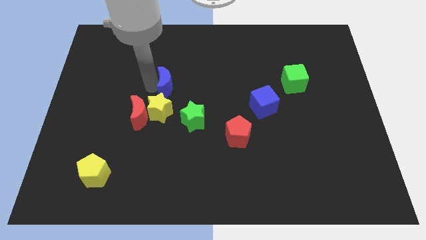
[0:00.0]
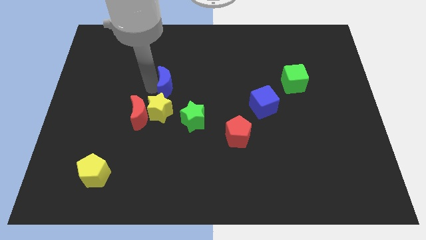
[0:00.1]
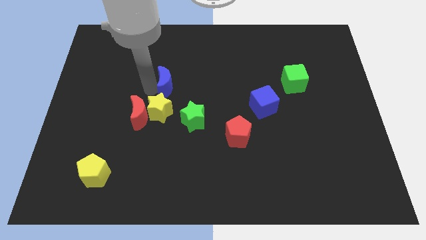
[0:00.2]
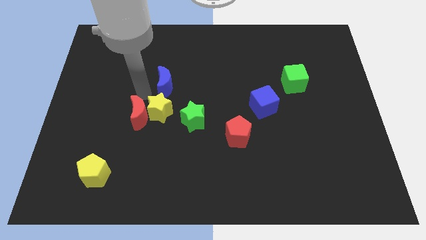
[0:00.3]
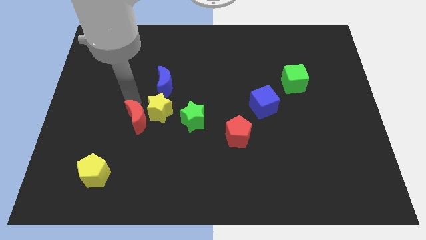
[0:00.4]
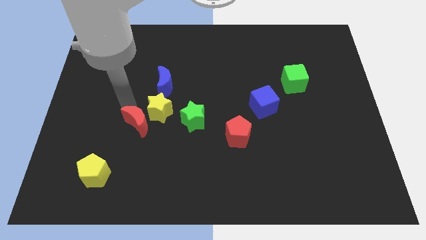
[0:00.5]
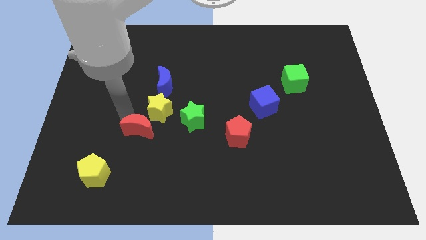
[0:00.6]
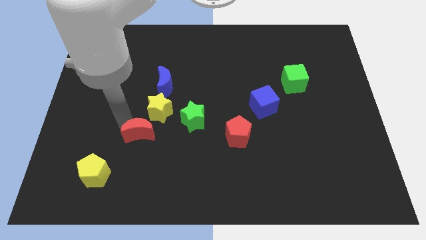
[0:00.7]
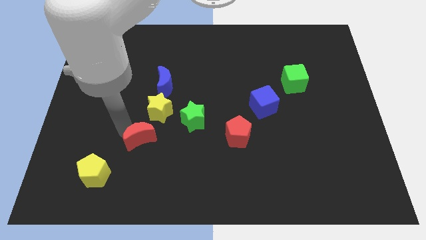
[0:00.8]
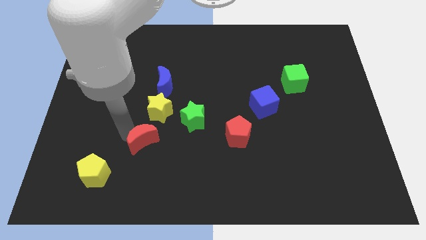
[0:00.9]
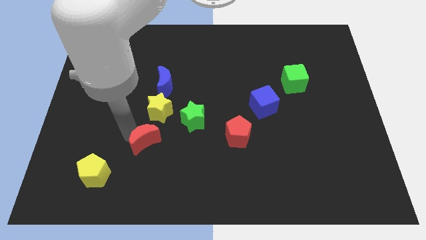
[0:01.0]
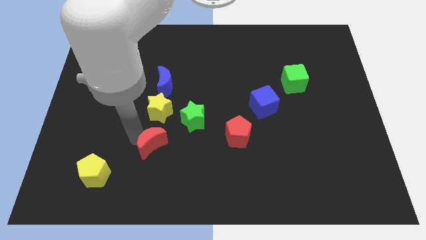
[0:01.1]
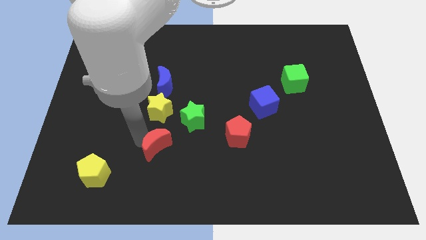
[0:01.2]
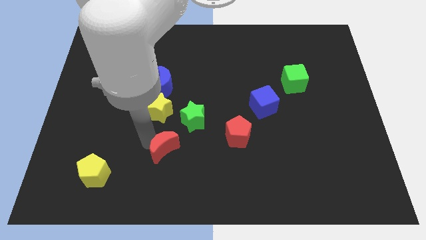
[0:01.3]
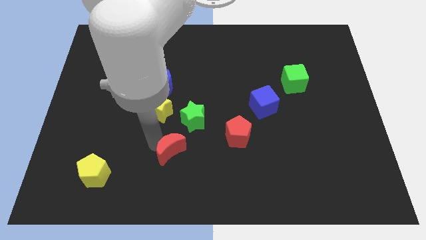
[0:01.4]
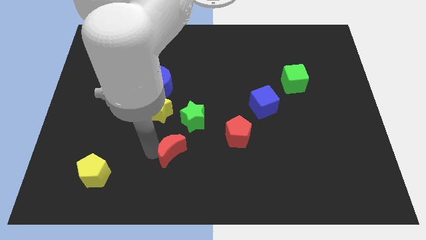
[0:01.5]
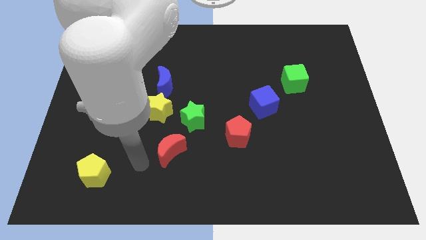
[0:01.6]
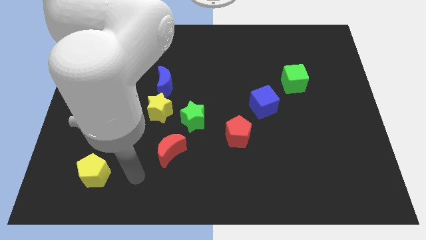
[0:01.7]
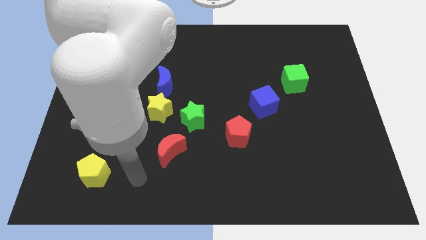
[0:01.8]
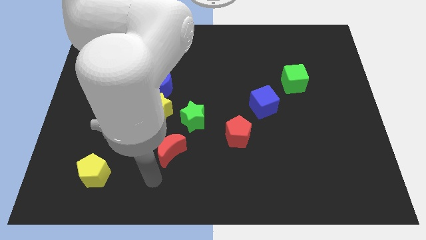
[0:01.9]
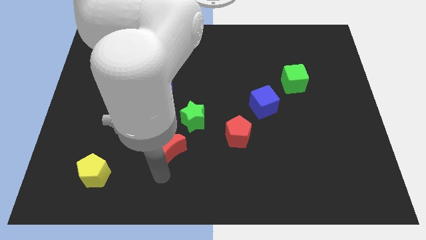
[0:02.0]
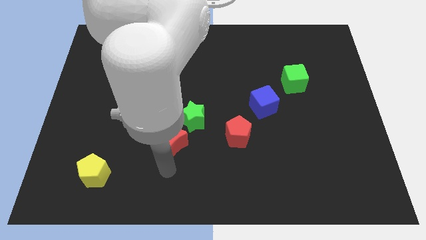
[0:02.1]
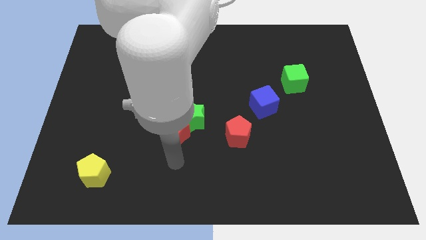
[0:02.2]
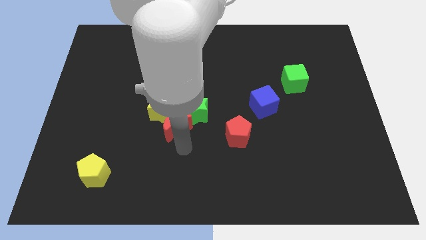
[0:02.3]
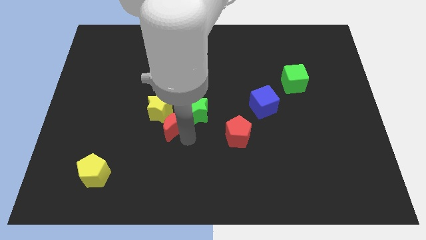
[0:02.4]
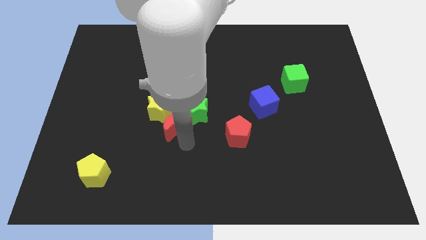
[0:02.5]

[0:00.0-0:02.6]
move red moon into green star

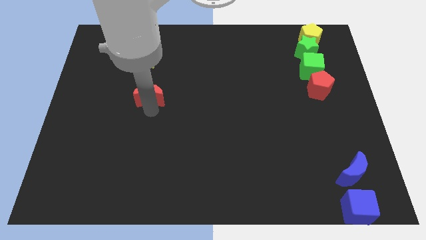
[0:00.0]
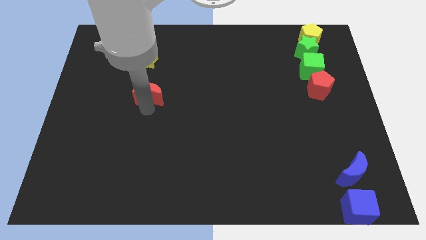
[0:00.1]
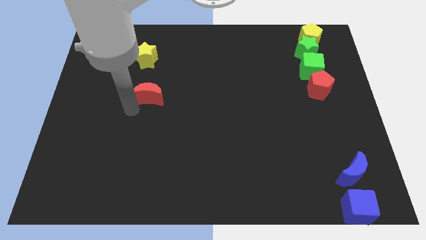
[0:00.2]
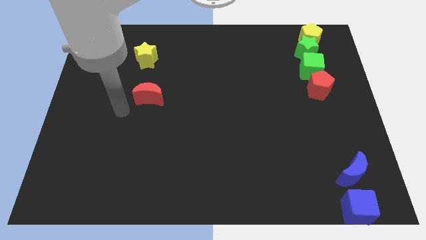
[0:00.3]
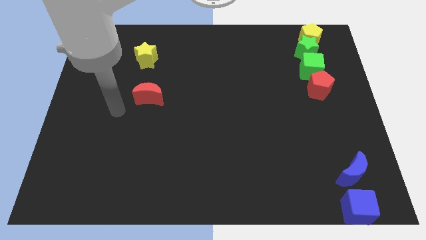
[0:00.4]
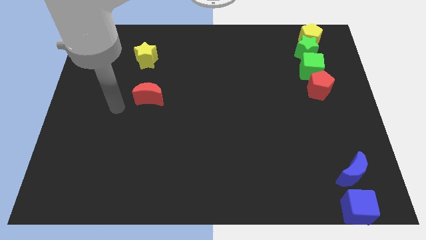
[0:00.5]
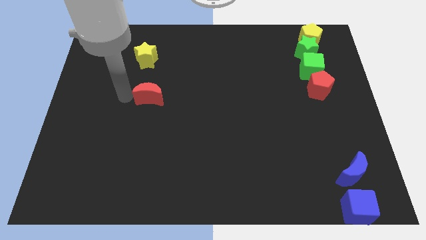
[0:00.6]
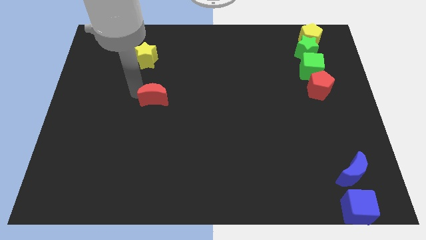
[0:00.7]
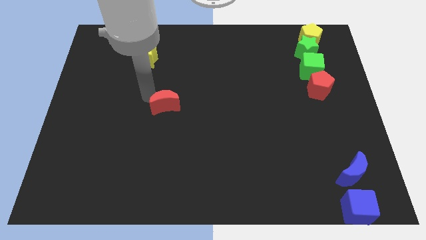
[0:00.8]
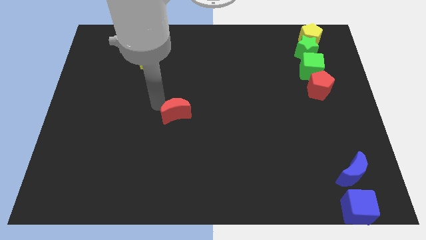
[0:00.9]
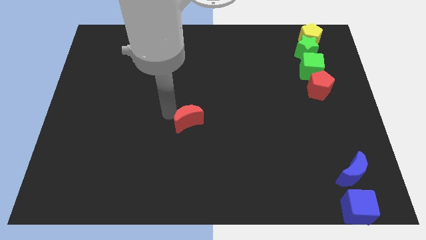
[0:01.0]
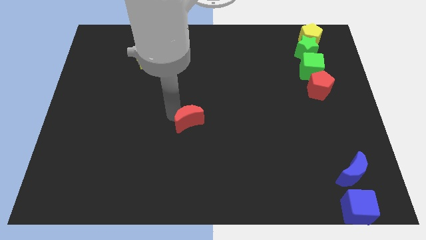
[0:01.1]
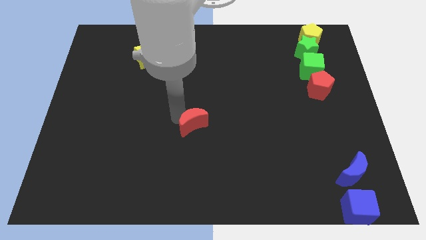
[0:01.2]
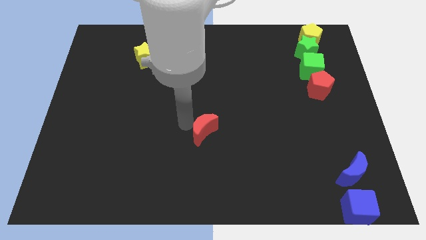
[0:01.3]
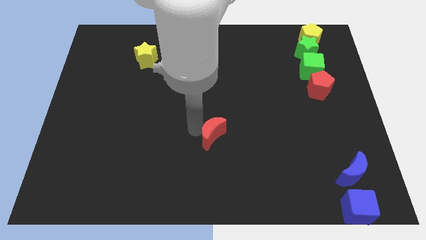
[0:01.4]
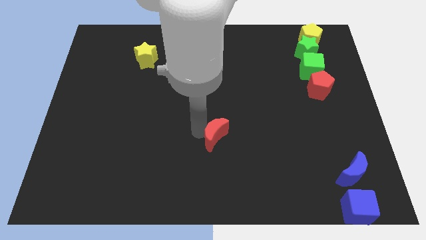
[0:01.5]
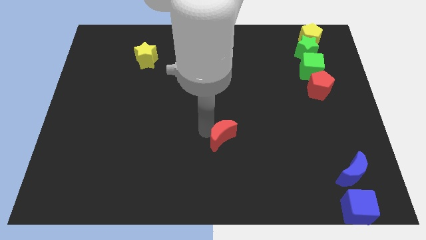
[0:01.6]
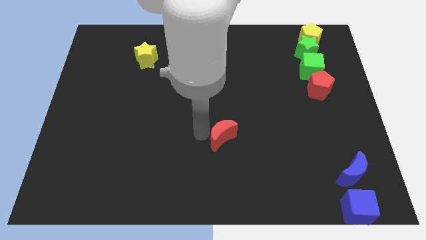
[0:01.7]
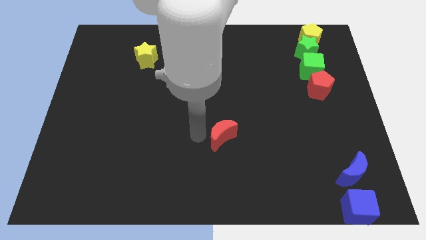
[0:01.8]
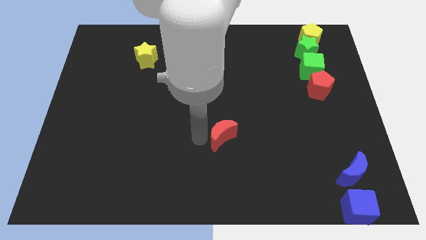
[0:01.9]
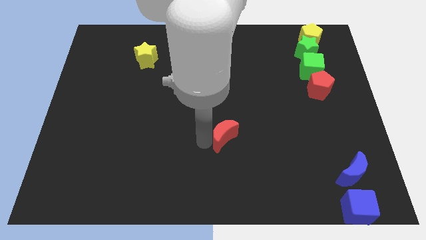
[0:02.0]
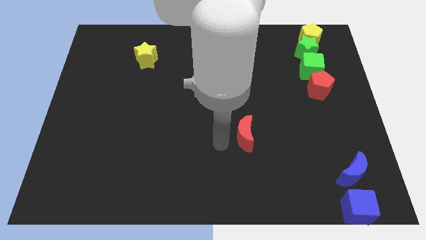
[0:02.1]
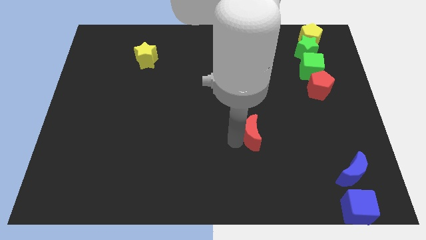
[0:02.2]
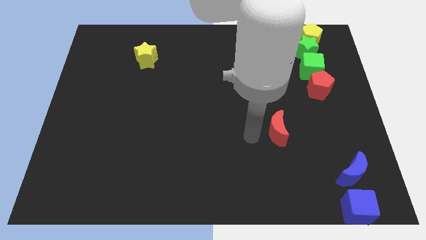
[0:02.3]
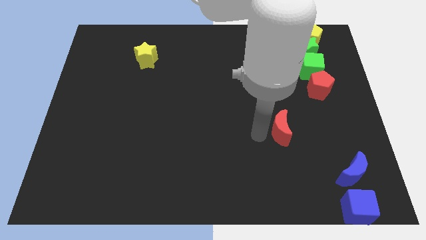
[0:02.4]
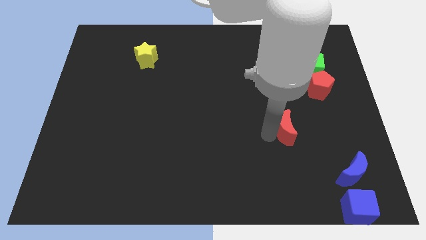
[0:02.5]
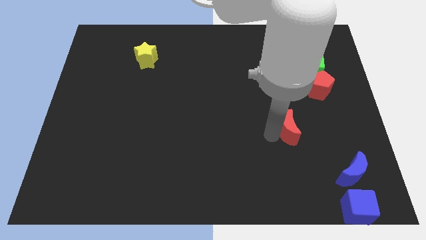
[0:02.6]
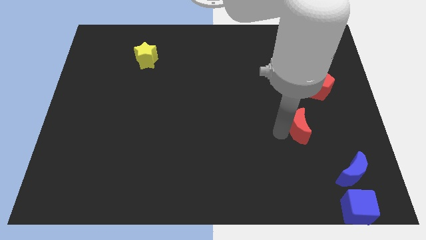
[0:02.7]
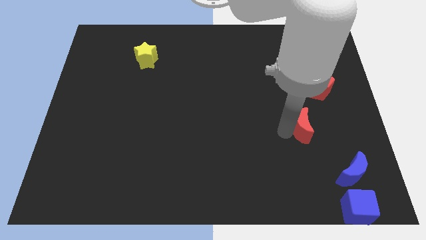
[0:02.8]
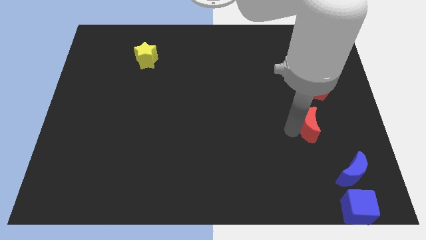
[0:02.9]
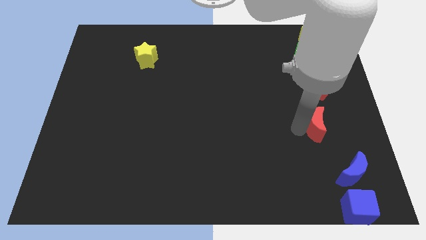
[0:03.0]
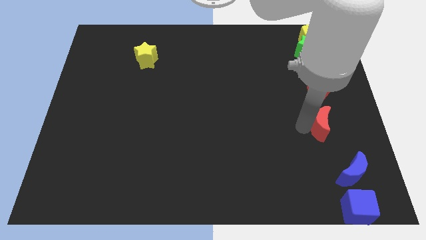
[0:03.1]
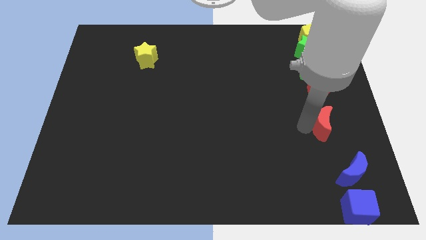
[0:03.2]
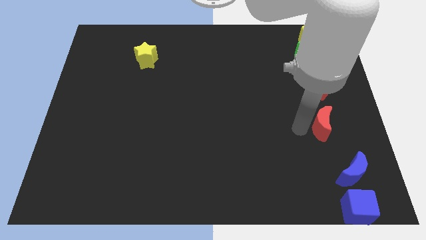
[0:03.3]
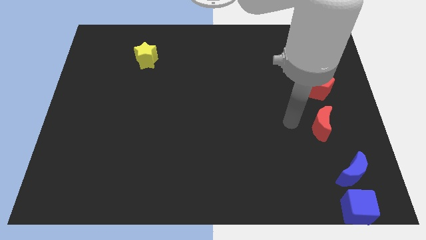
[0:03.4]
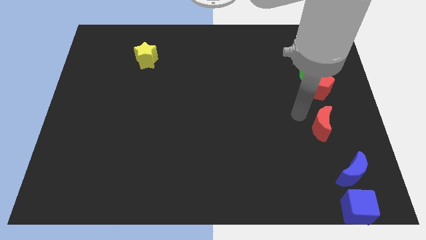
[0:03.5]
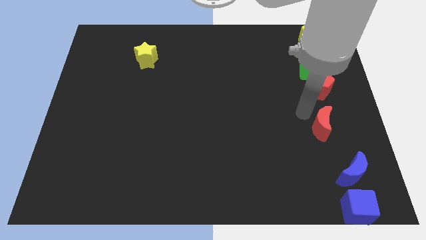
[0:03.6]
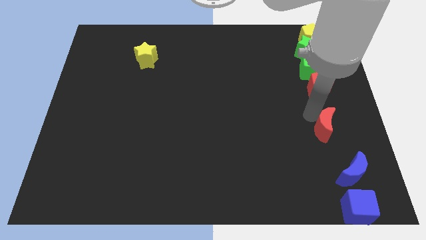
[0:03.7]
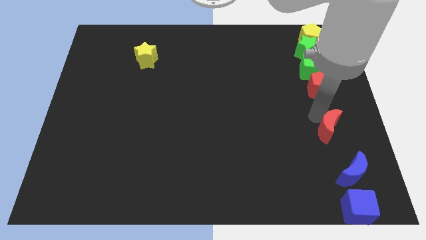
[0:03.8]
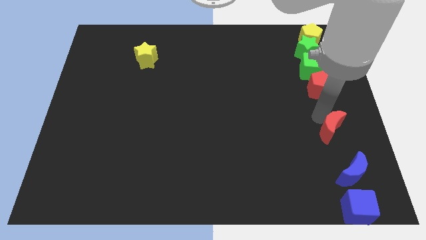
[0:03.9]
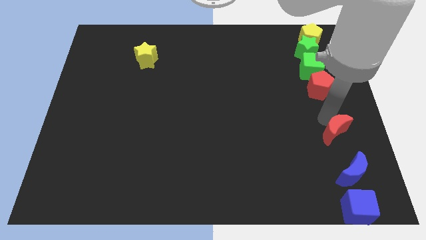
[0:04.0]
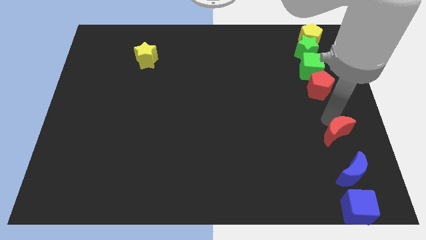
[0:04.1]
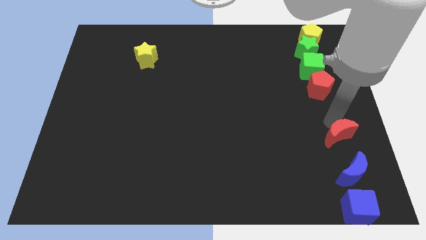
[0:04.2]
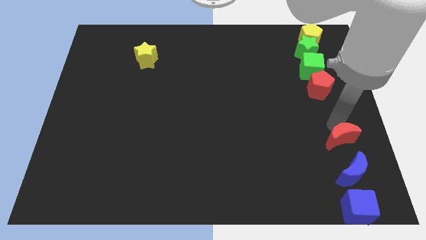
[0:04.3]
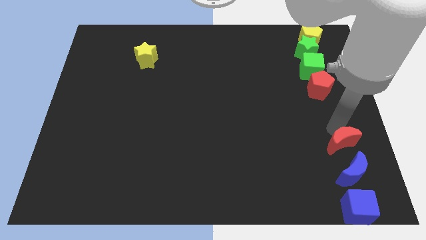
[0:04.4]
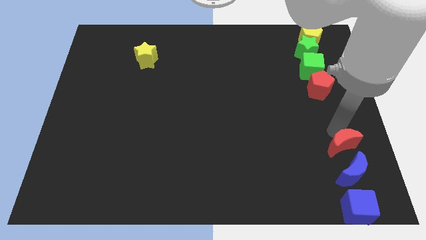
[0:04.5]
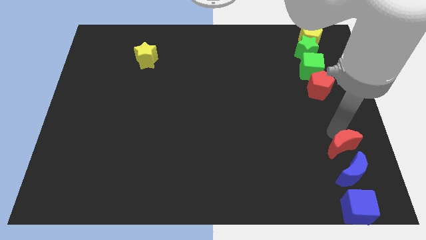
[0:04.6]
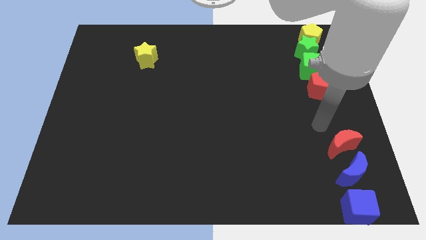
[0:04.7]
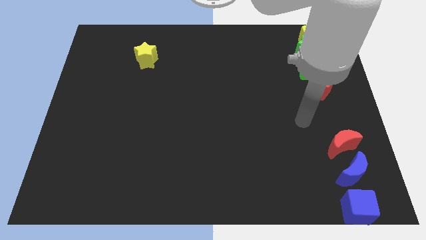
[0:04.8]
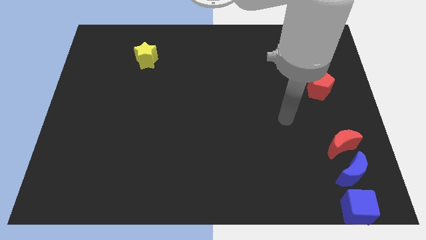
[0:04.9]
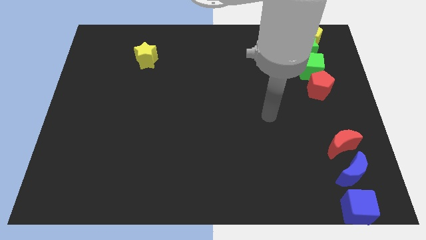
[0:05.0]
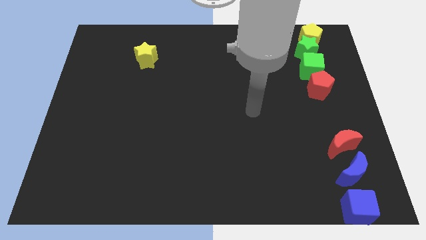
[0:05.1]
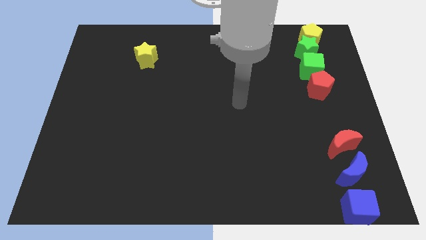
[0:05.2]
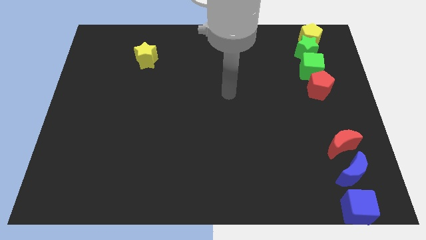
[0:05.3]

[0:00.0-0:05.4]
place the red crescent on top of the blue crescent

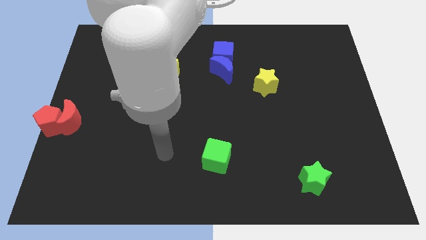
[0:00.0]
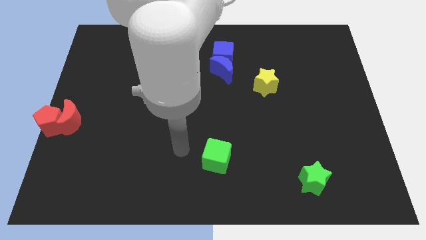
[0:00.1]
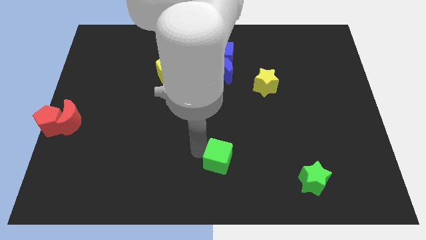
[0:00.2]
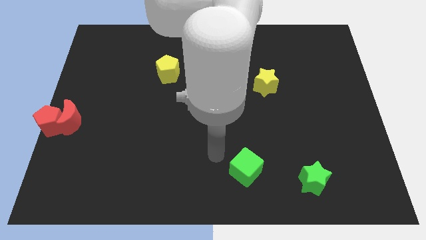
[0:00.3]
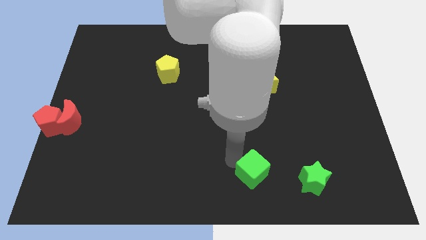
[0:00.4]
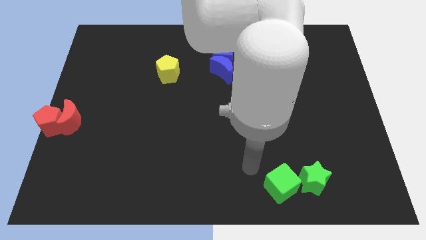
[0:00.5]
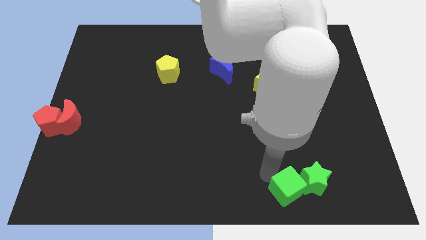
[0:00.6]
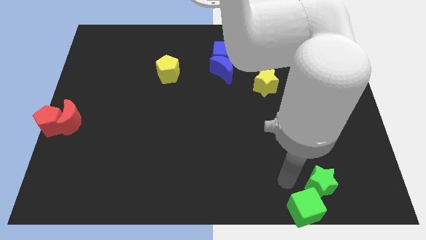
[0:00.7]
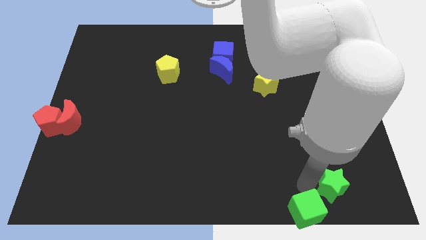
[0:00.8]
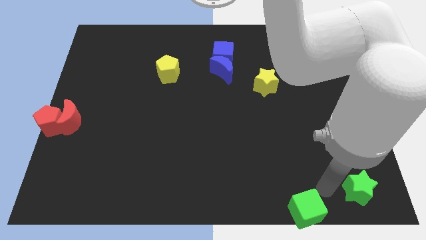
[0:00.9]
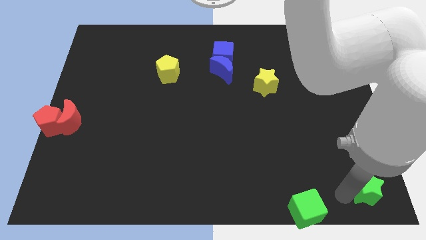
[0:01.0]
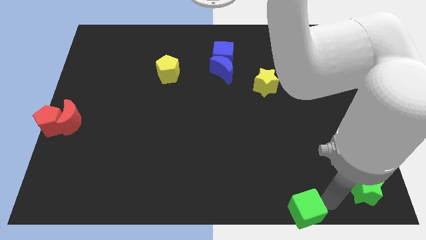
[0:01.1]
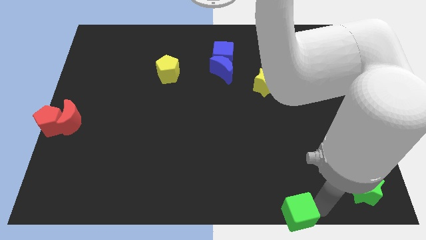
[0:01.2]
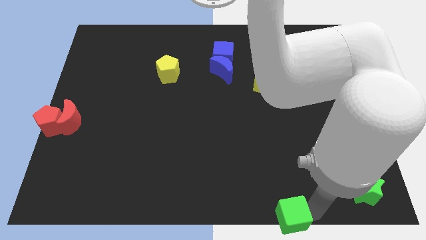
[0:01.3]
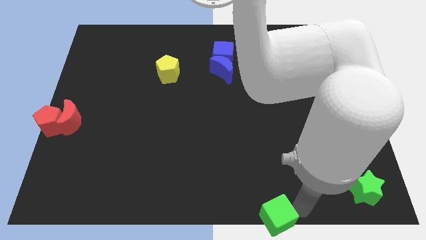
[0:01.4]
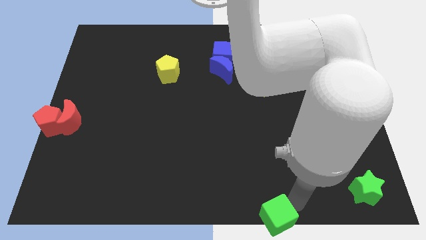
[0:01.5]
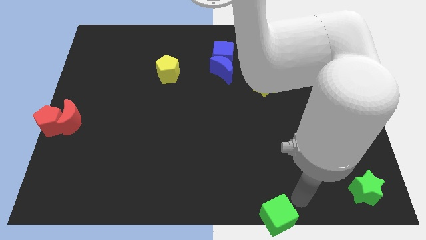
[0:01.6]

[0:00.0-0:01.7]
push the green star towards the right bottom of the board
